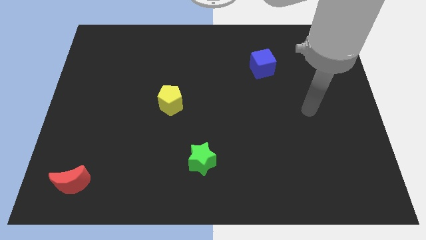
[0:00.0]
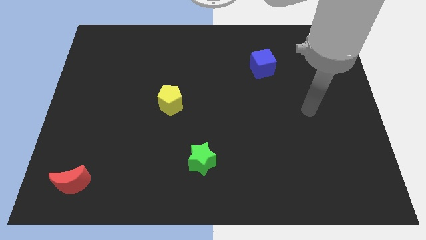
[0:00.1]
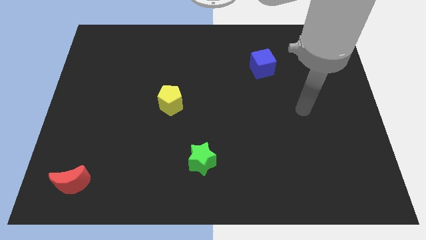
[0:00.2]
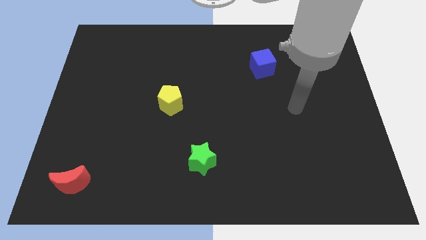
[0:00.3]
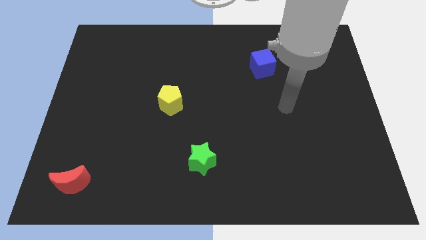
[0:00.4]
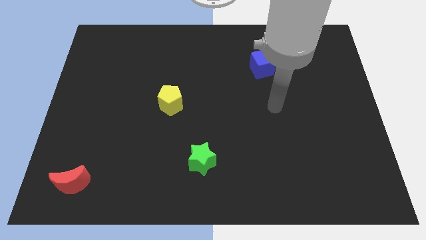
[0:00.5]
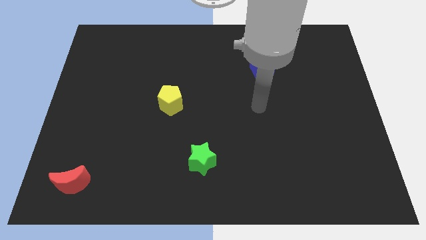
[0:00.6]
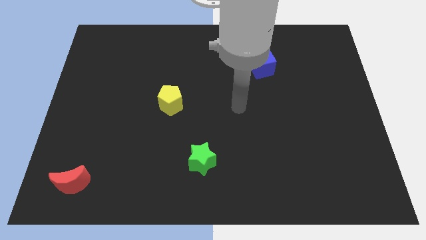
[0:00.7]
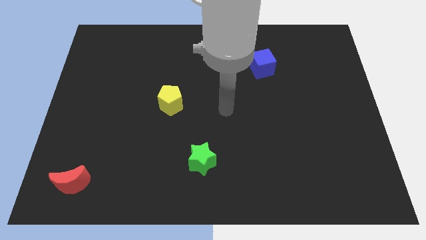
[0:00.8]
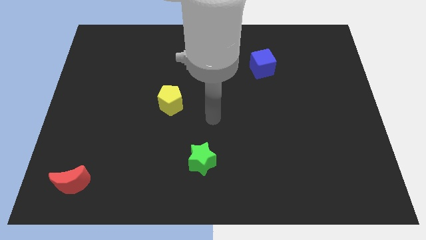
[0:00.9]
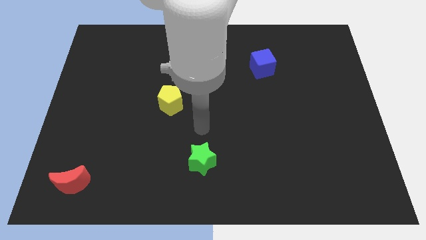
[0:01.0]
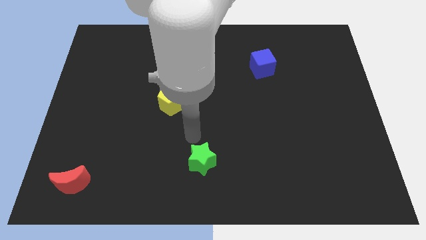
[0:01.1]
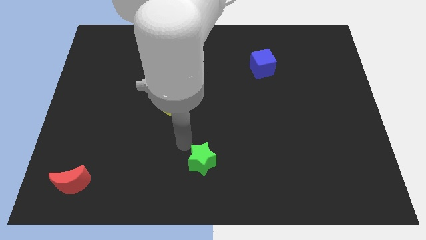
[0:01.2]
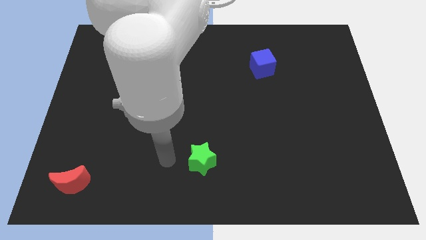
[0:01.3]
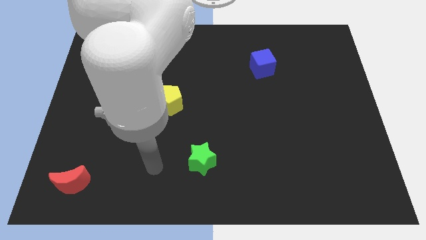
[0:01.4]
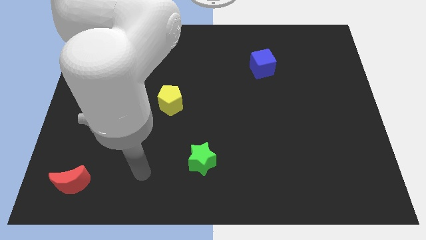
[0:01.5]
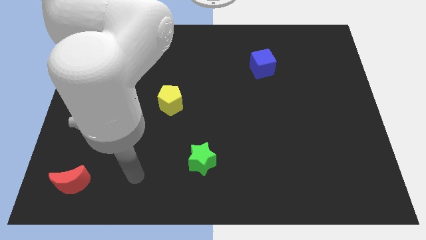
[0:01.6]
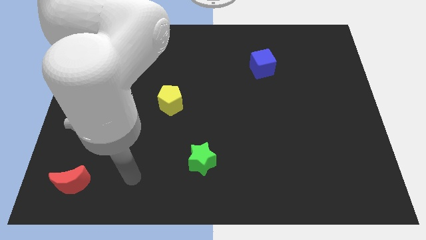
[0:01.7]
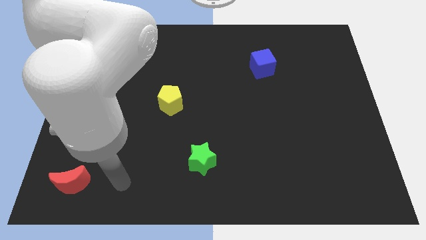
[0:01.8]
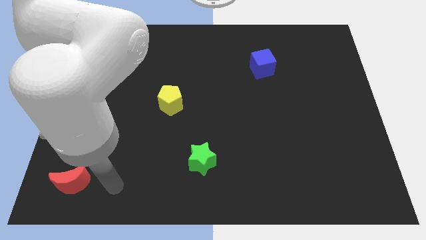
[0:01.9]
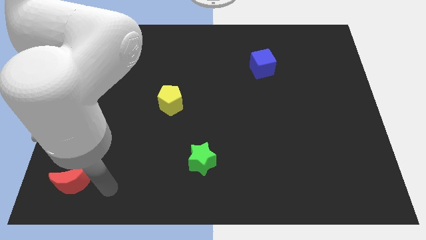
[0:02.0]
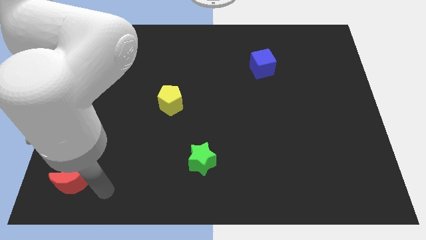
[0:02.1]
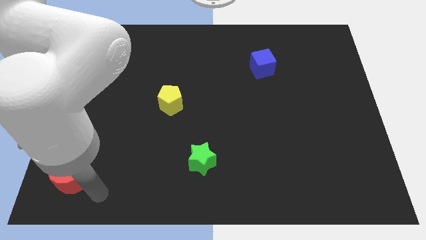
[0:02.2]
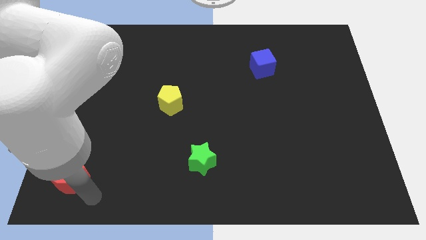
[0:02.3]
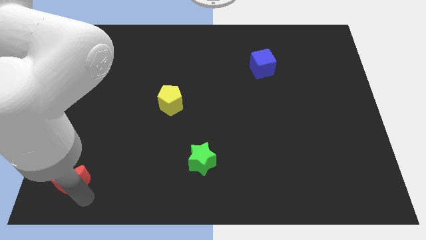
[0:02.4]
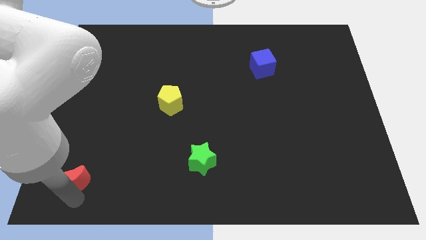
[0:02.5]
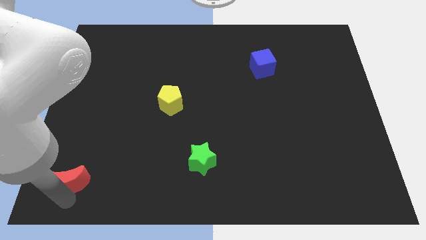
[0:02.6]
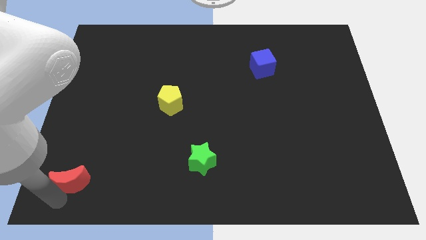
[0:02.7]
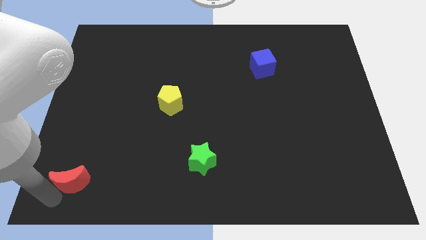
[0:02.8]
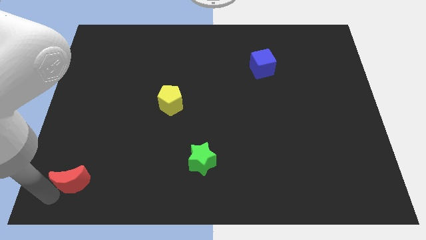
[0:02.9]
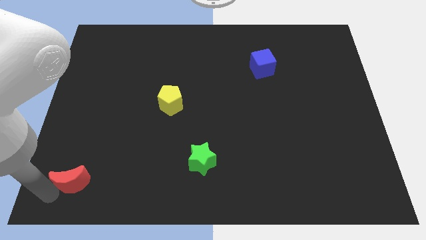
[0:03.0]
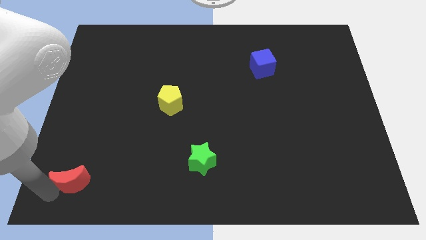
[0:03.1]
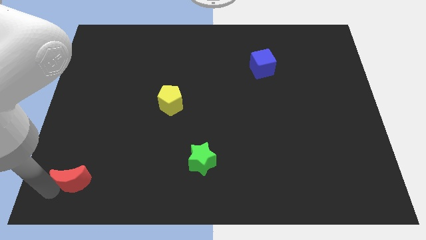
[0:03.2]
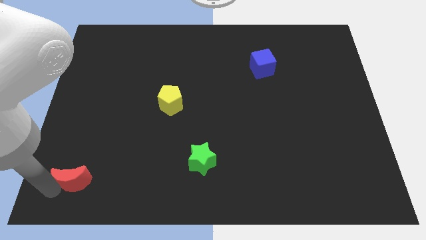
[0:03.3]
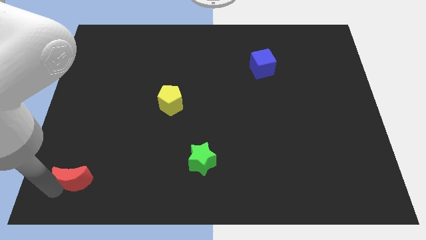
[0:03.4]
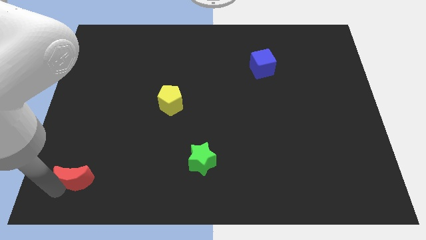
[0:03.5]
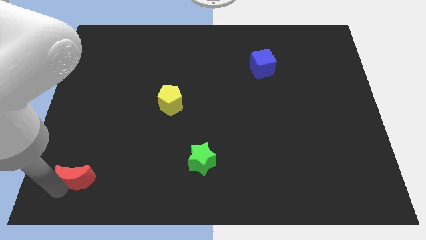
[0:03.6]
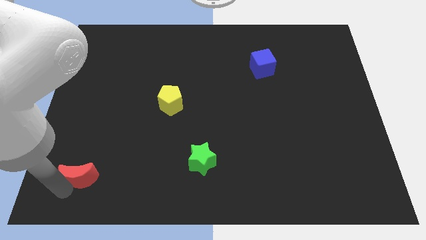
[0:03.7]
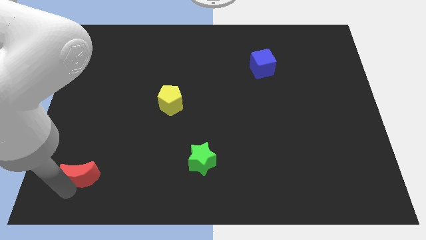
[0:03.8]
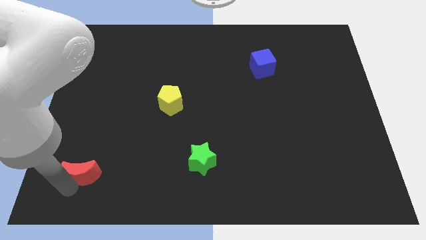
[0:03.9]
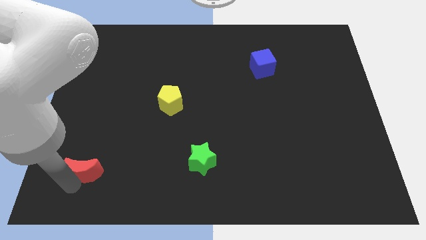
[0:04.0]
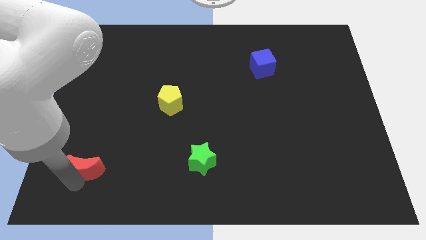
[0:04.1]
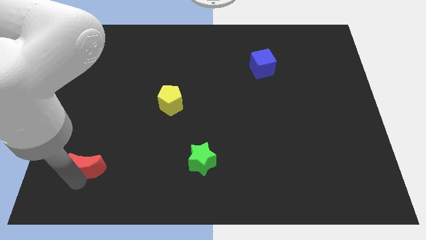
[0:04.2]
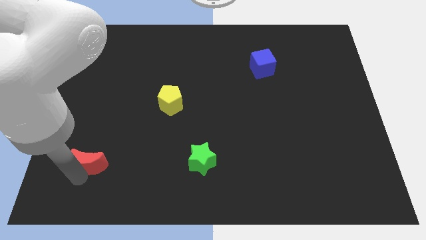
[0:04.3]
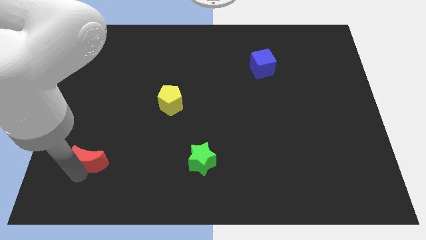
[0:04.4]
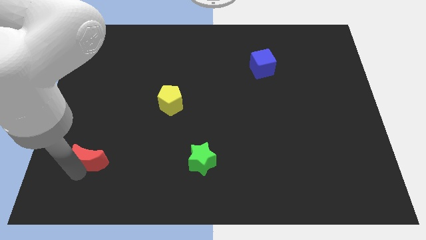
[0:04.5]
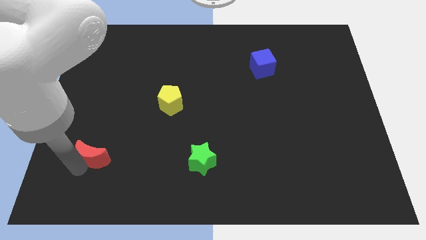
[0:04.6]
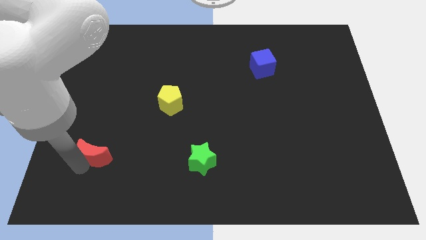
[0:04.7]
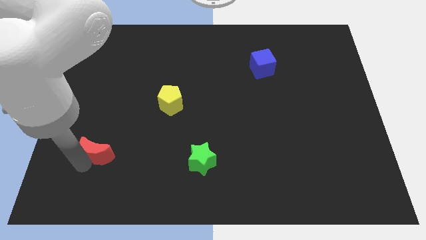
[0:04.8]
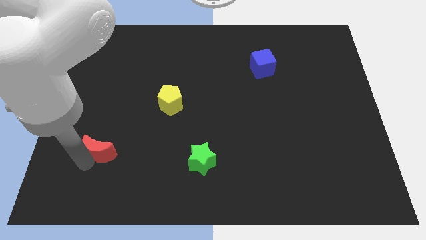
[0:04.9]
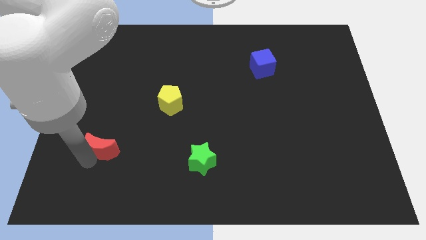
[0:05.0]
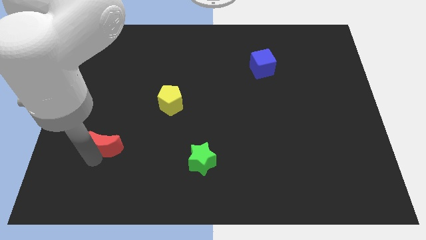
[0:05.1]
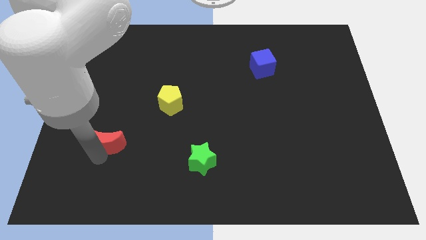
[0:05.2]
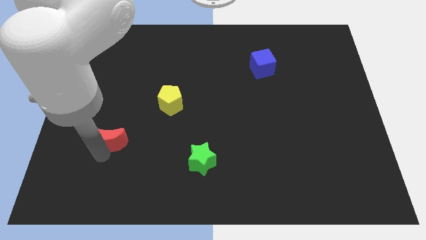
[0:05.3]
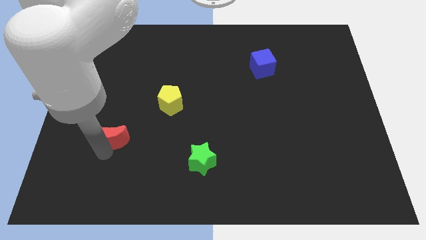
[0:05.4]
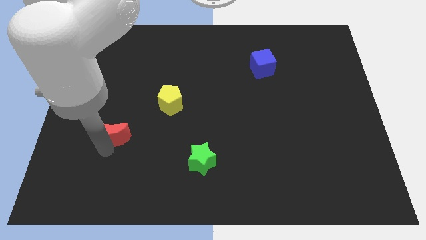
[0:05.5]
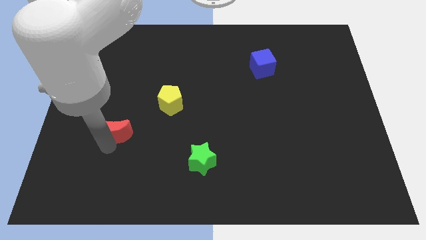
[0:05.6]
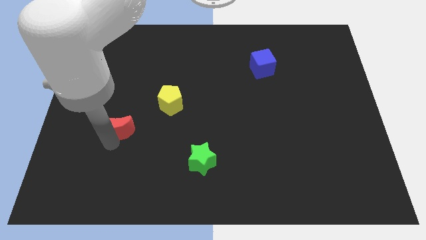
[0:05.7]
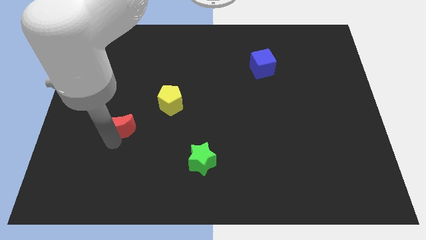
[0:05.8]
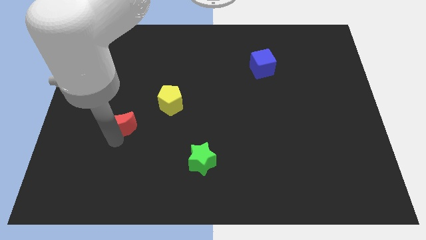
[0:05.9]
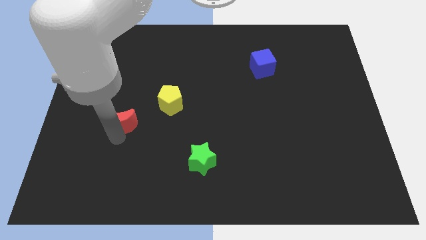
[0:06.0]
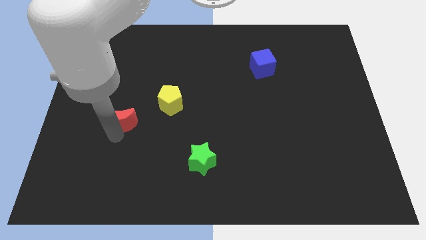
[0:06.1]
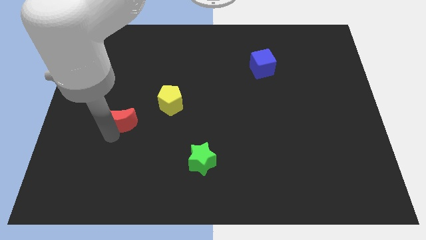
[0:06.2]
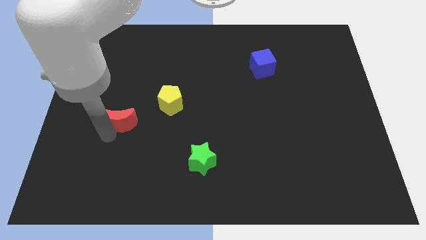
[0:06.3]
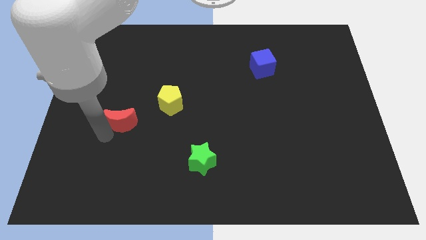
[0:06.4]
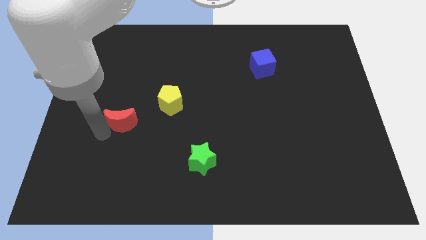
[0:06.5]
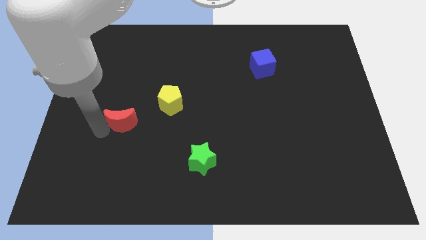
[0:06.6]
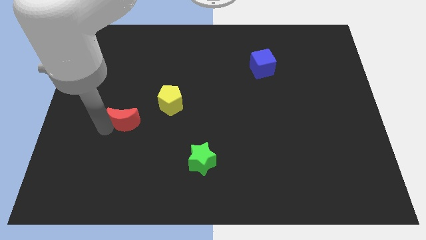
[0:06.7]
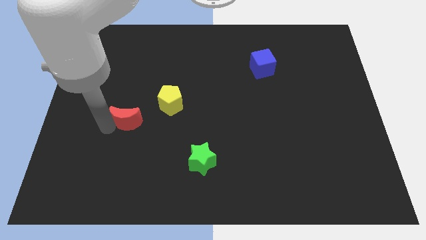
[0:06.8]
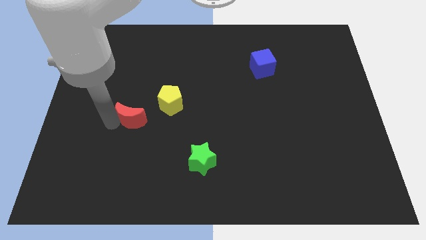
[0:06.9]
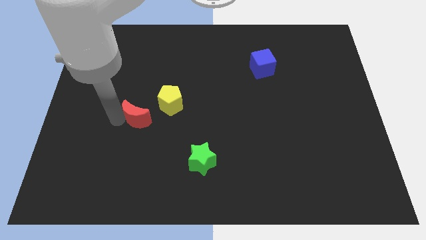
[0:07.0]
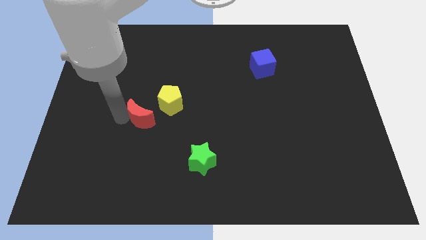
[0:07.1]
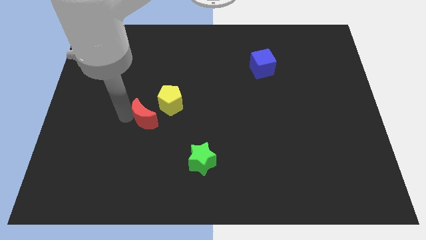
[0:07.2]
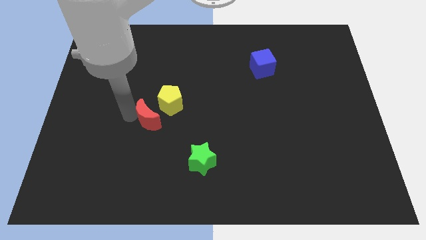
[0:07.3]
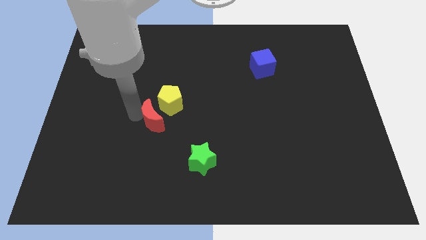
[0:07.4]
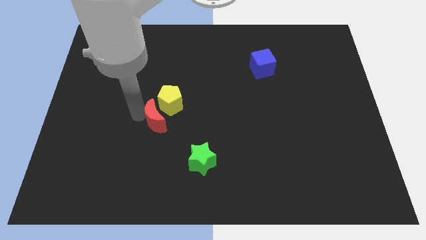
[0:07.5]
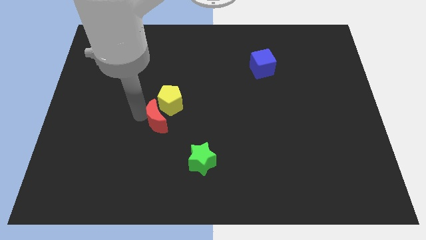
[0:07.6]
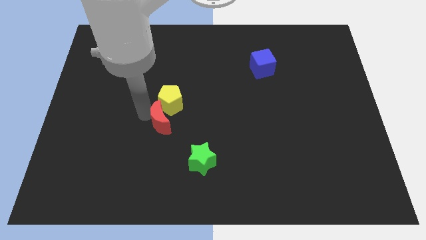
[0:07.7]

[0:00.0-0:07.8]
push the red moon close to the yellow block

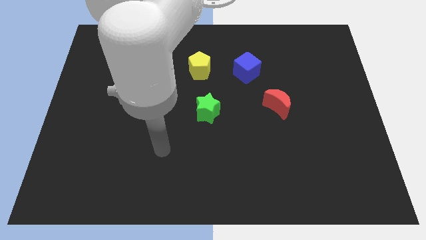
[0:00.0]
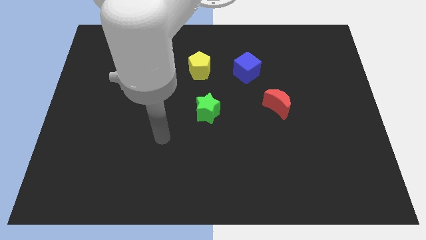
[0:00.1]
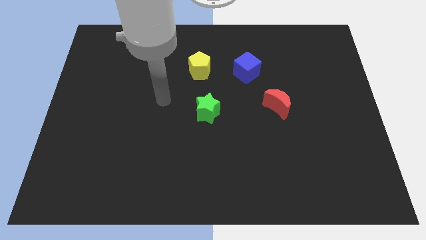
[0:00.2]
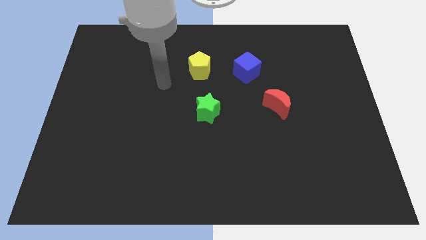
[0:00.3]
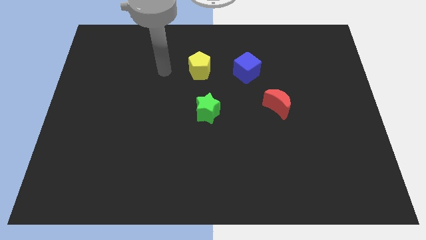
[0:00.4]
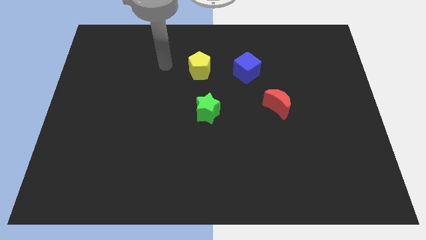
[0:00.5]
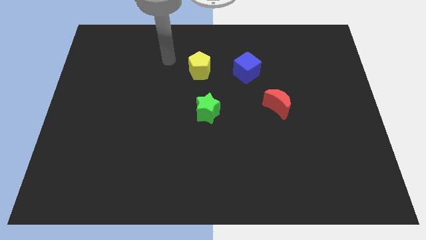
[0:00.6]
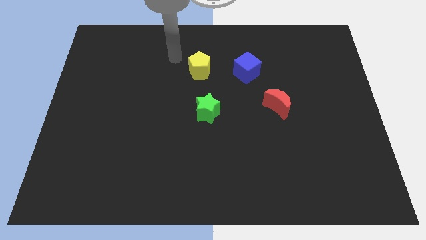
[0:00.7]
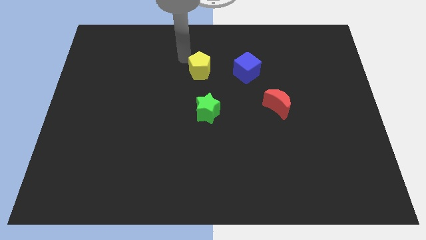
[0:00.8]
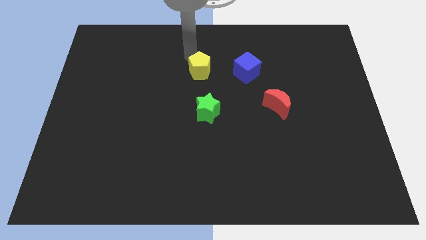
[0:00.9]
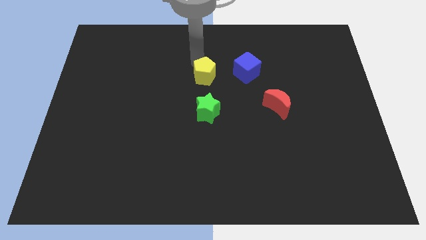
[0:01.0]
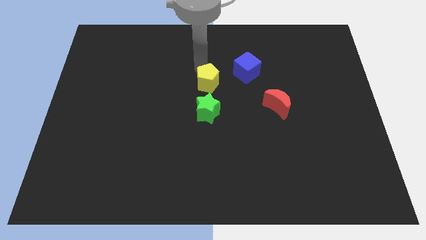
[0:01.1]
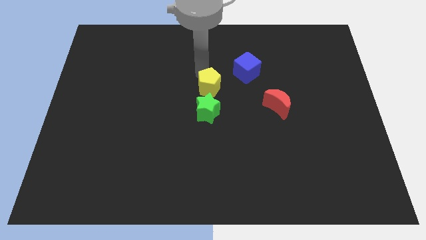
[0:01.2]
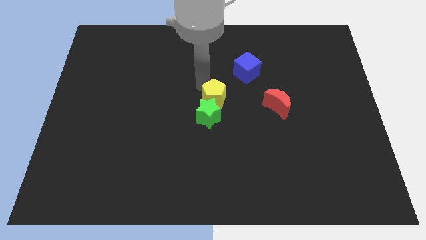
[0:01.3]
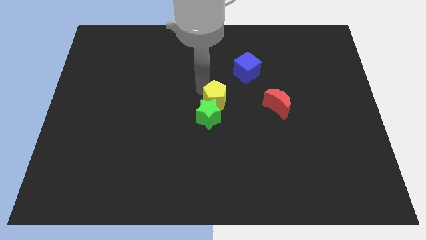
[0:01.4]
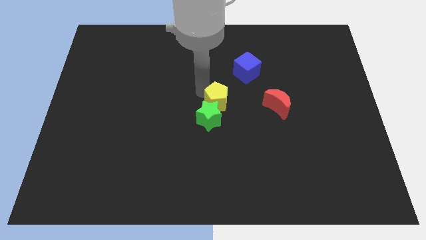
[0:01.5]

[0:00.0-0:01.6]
put the yellow pentagon close to the green star
